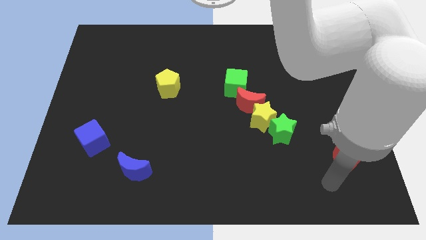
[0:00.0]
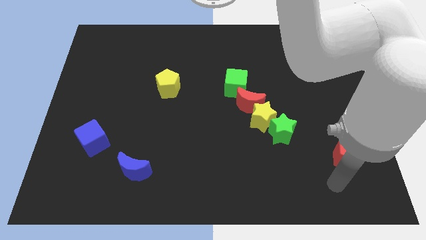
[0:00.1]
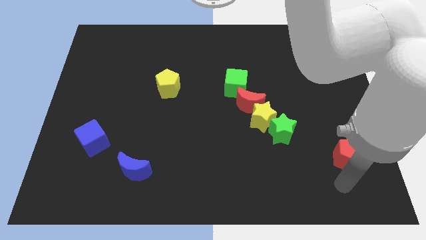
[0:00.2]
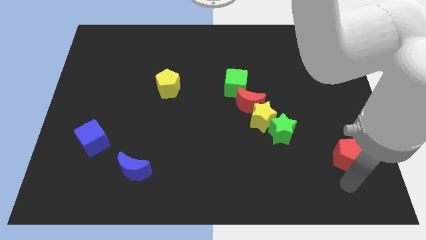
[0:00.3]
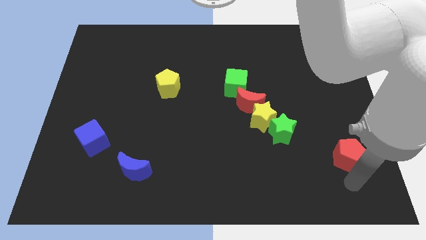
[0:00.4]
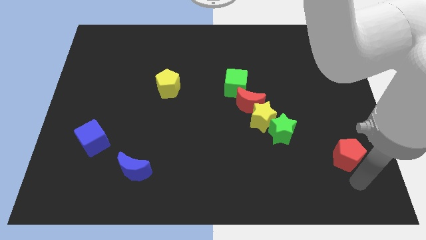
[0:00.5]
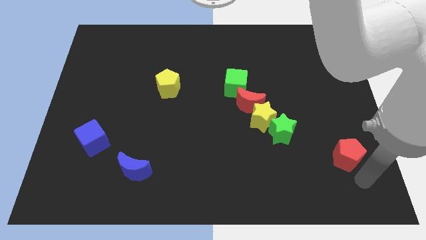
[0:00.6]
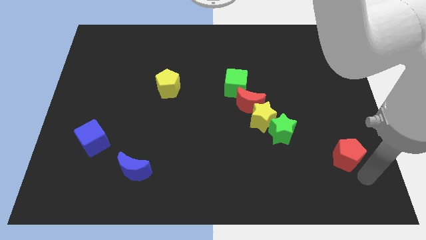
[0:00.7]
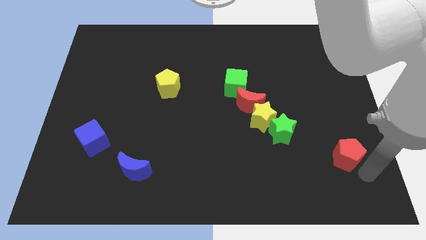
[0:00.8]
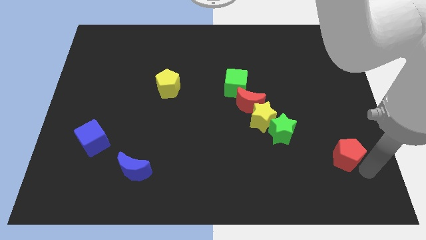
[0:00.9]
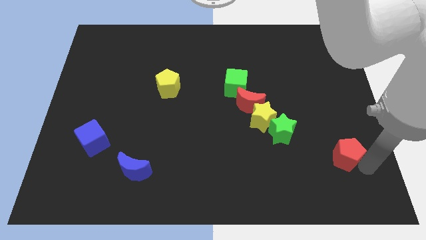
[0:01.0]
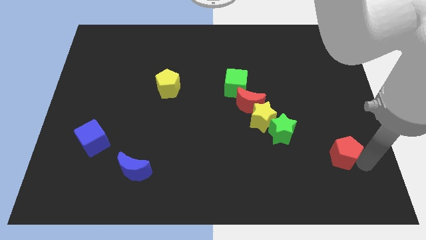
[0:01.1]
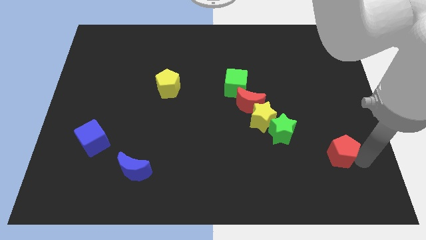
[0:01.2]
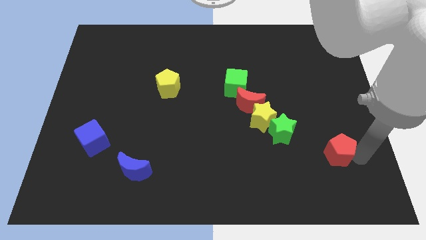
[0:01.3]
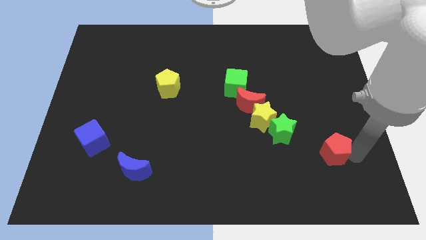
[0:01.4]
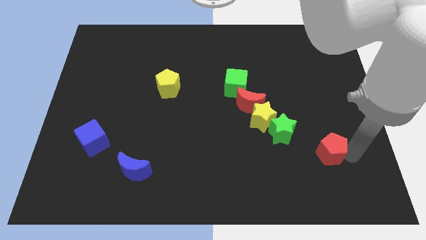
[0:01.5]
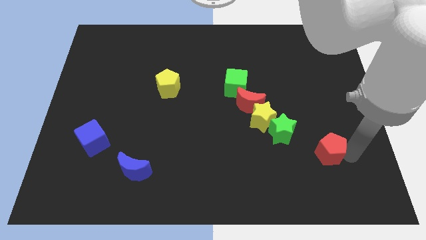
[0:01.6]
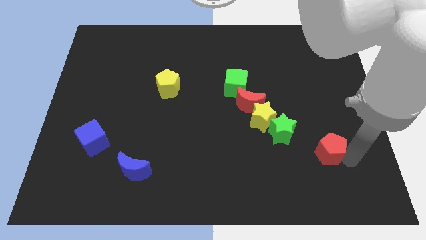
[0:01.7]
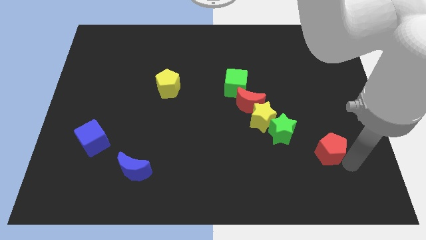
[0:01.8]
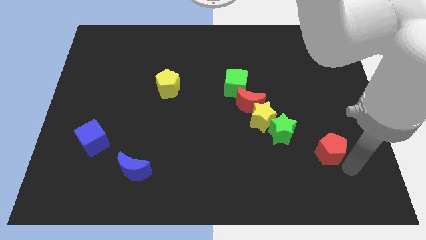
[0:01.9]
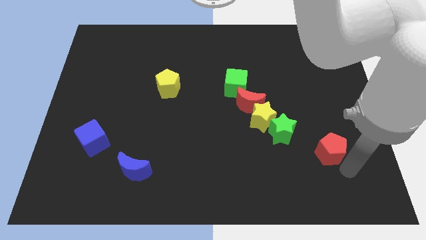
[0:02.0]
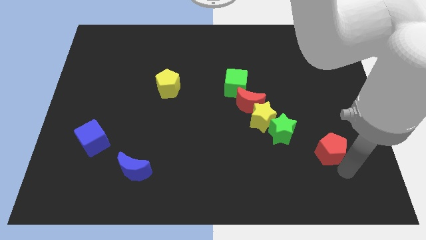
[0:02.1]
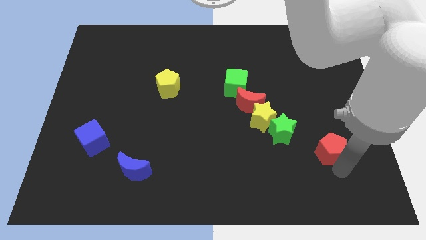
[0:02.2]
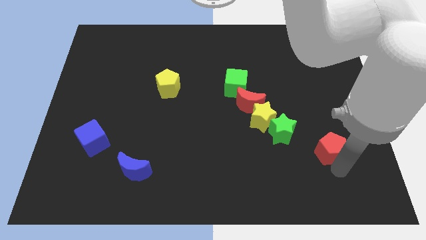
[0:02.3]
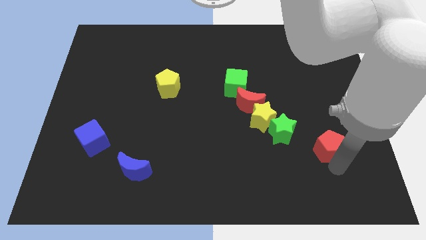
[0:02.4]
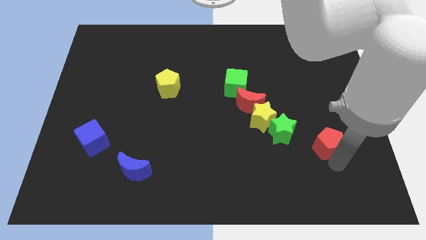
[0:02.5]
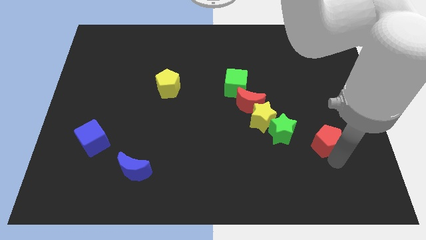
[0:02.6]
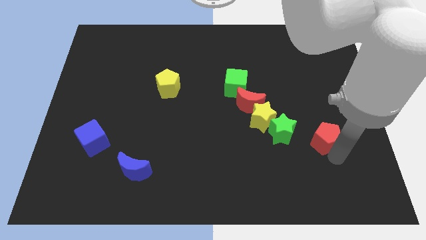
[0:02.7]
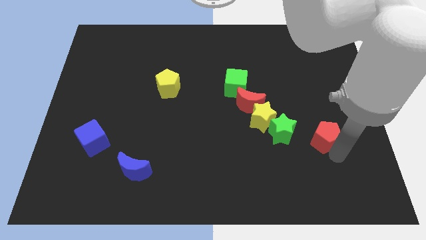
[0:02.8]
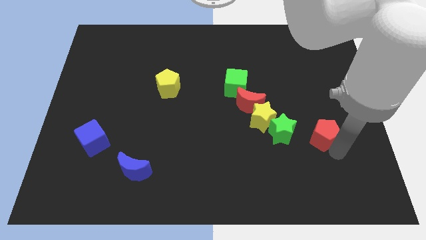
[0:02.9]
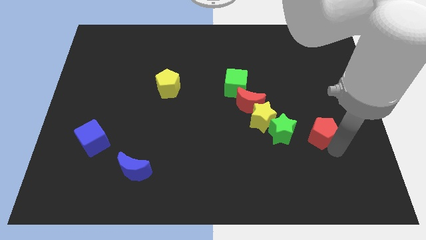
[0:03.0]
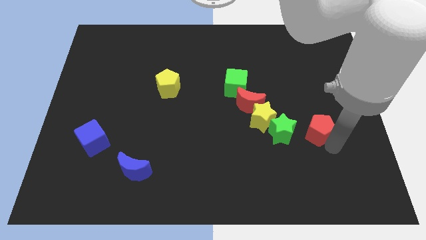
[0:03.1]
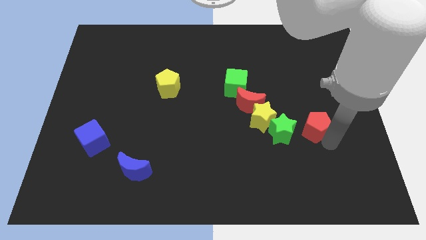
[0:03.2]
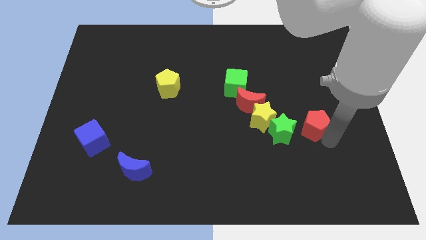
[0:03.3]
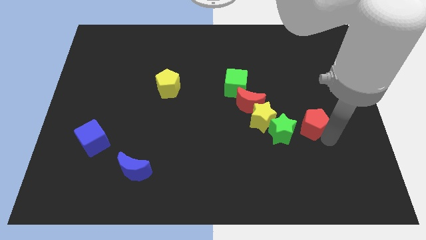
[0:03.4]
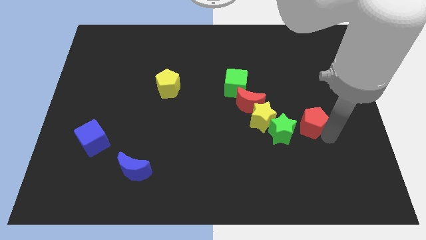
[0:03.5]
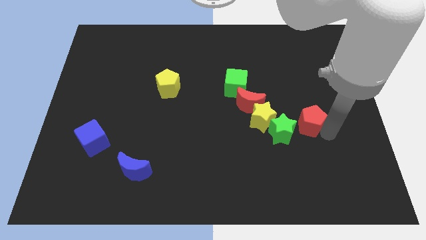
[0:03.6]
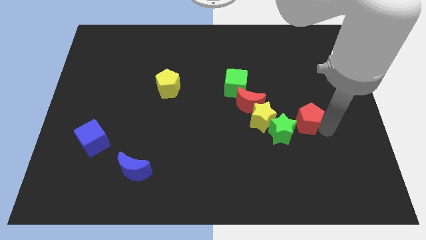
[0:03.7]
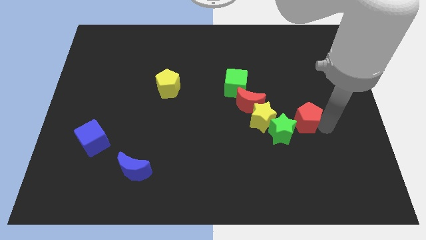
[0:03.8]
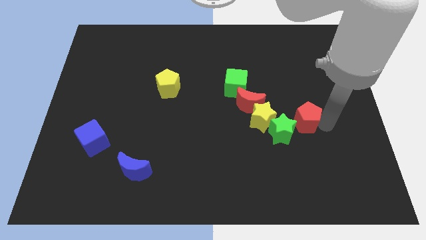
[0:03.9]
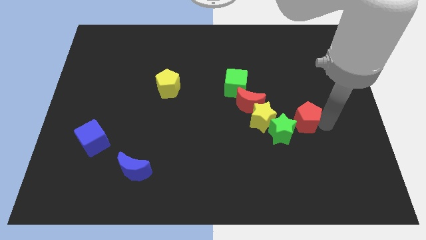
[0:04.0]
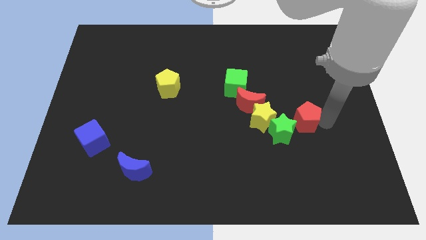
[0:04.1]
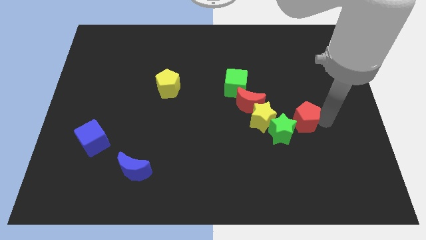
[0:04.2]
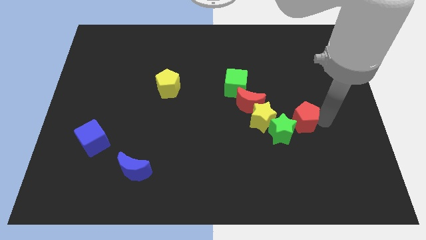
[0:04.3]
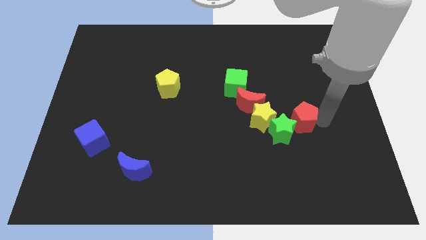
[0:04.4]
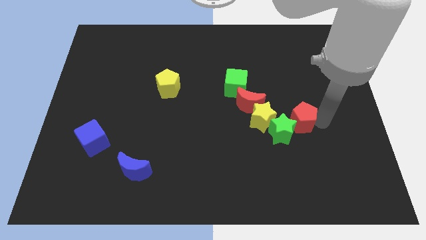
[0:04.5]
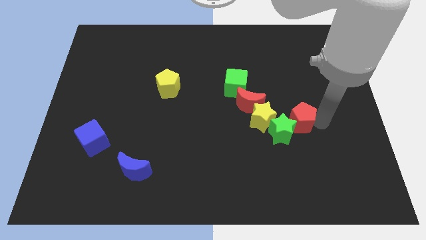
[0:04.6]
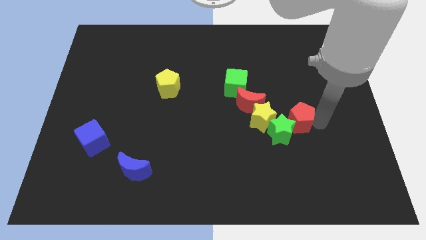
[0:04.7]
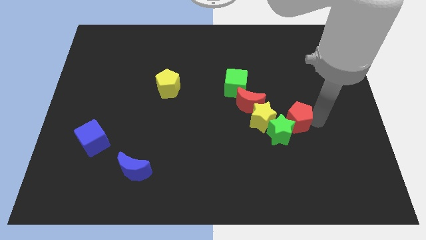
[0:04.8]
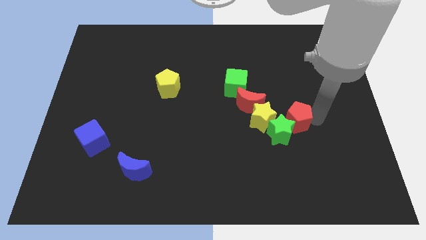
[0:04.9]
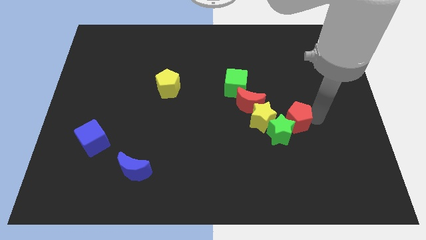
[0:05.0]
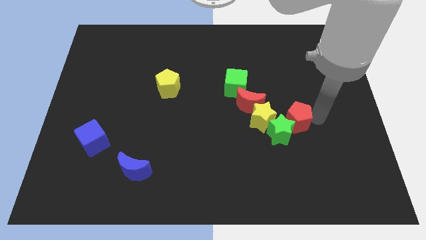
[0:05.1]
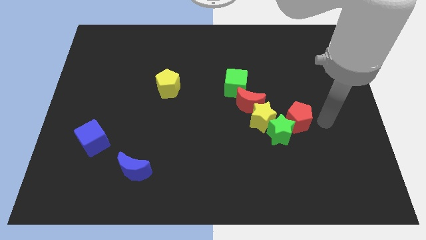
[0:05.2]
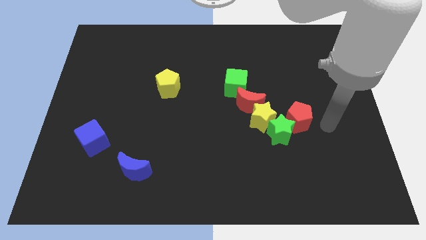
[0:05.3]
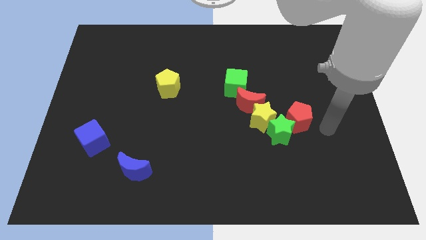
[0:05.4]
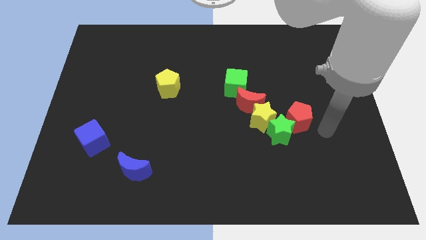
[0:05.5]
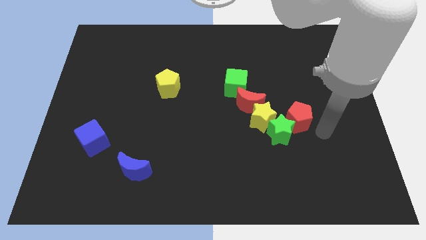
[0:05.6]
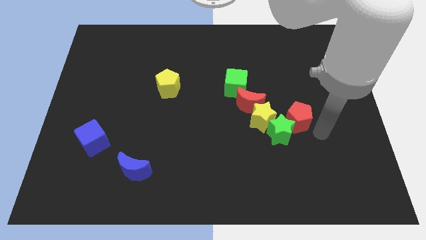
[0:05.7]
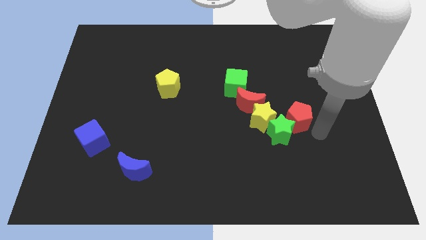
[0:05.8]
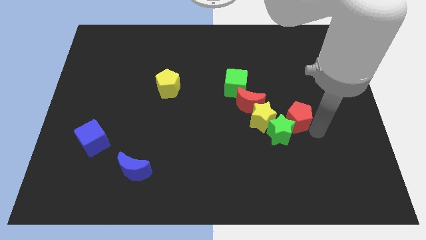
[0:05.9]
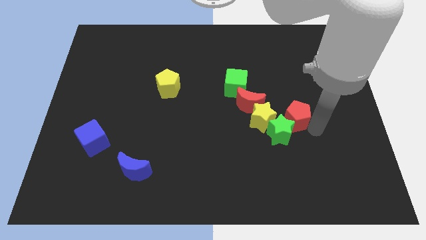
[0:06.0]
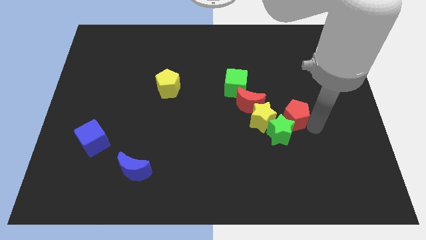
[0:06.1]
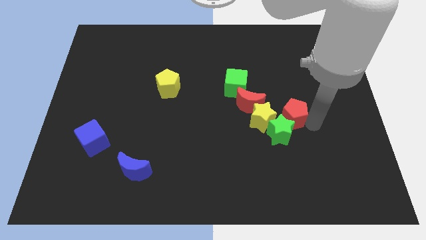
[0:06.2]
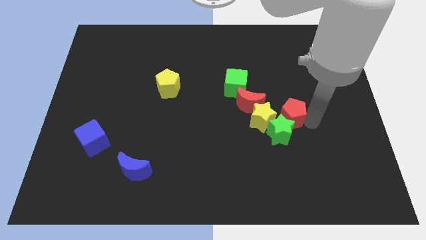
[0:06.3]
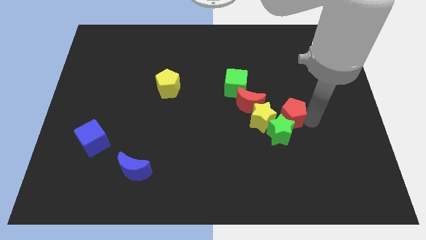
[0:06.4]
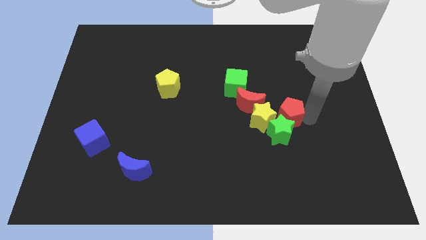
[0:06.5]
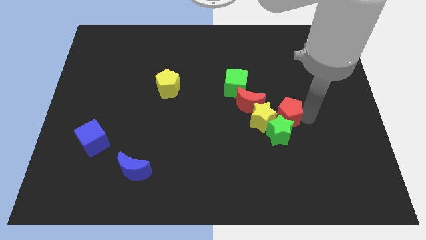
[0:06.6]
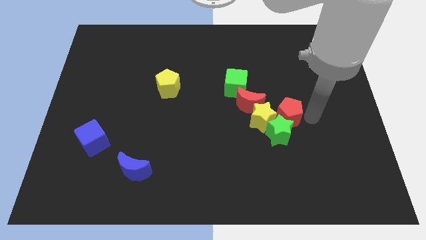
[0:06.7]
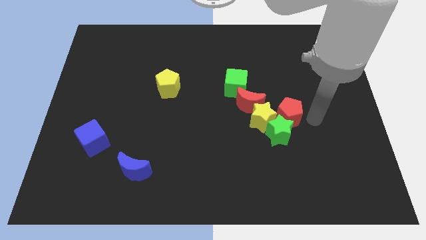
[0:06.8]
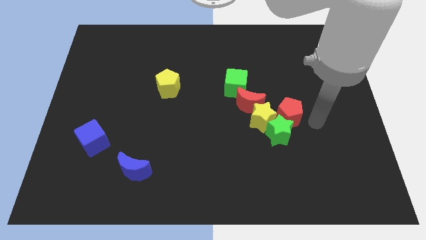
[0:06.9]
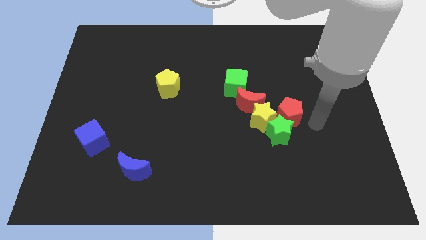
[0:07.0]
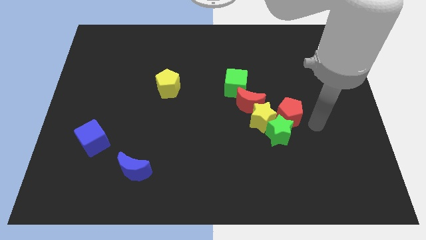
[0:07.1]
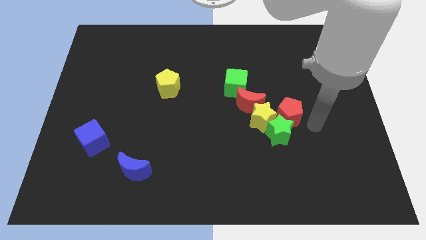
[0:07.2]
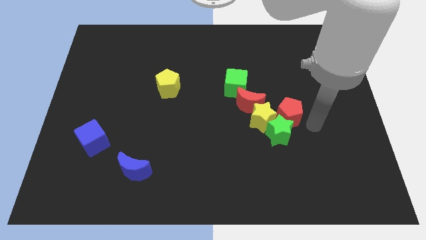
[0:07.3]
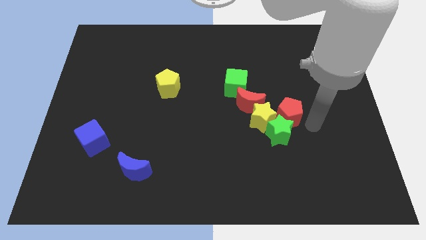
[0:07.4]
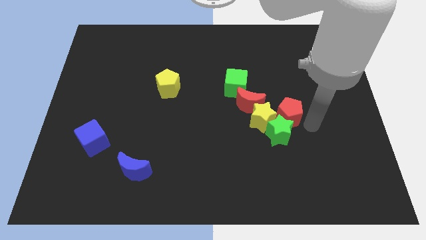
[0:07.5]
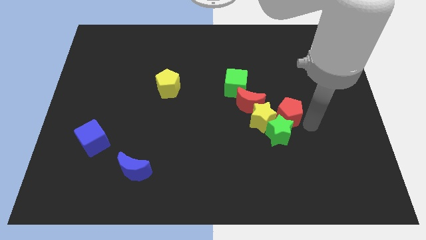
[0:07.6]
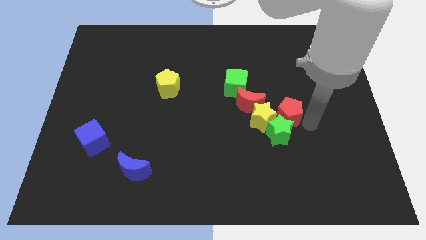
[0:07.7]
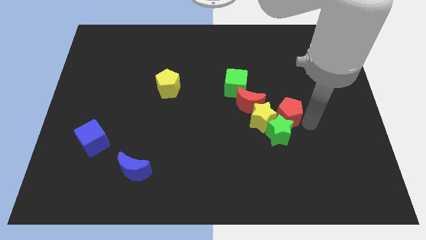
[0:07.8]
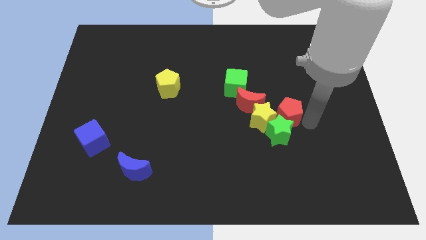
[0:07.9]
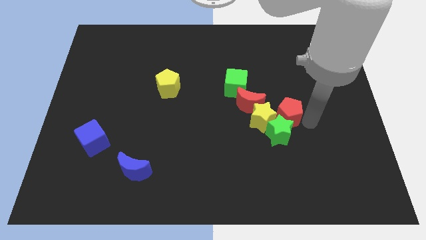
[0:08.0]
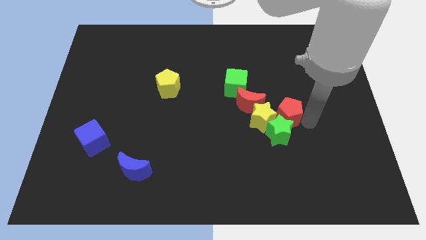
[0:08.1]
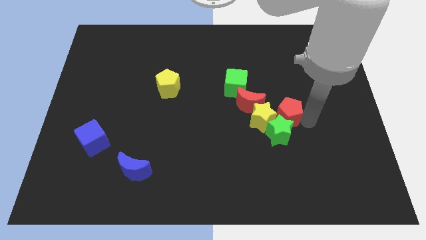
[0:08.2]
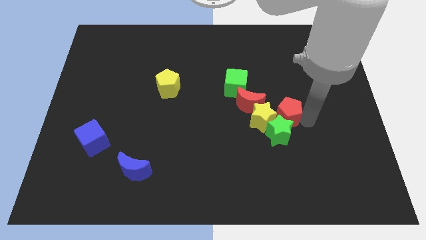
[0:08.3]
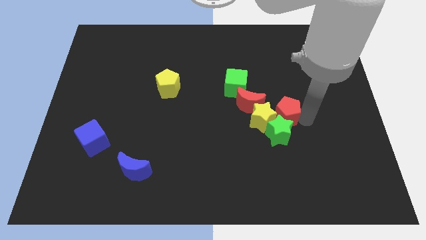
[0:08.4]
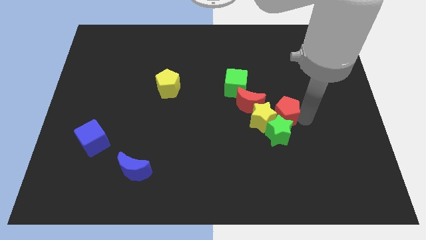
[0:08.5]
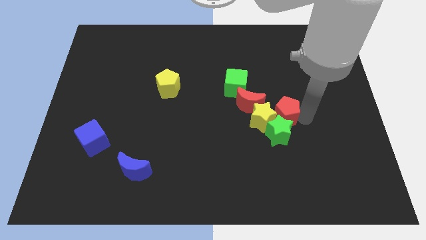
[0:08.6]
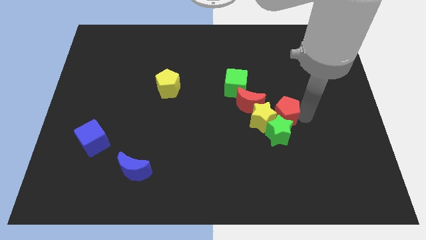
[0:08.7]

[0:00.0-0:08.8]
push the red pentagon to the right side of the yellow star
